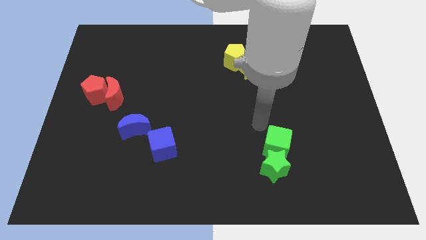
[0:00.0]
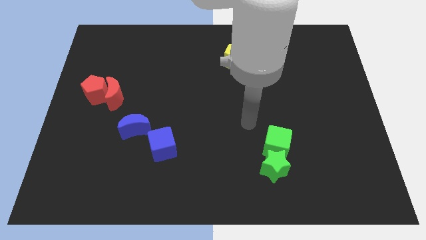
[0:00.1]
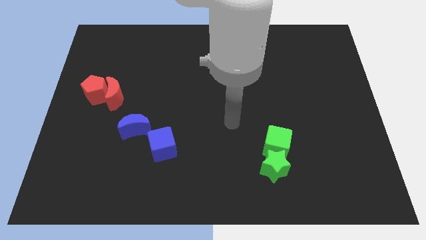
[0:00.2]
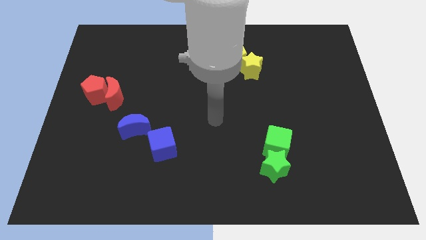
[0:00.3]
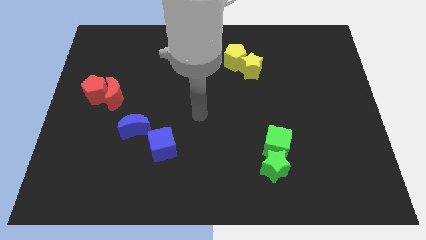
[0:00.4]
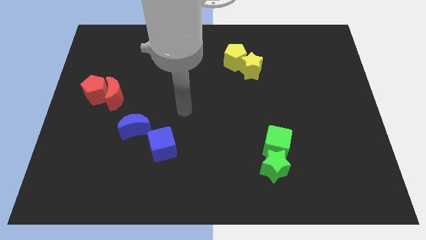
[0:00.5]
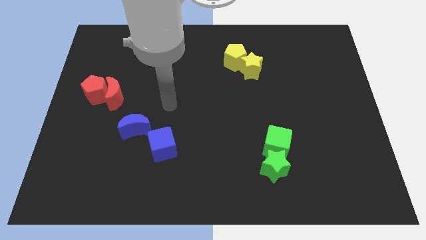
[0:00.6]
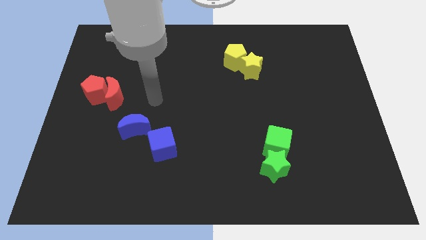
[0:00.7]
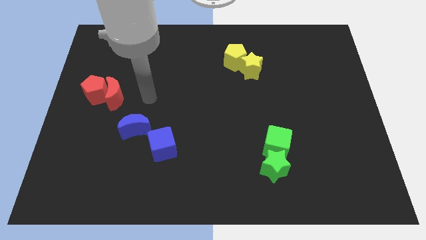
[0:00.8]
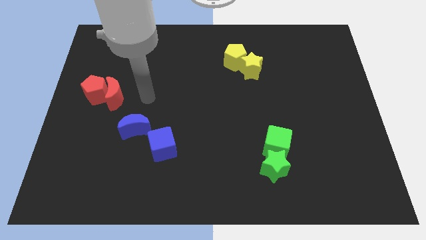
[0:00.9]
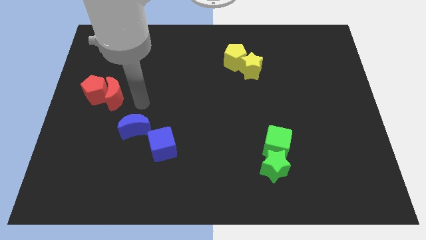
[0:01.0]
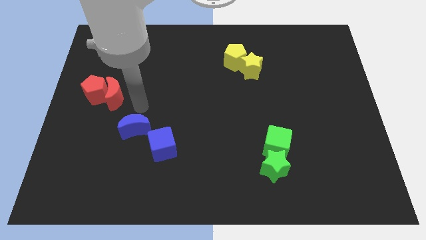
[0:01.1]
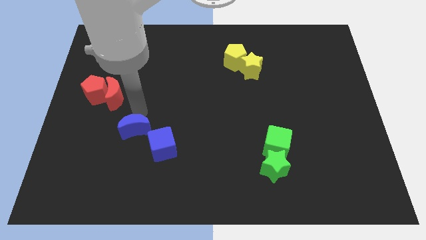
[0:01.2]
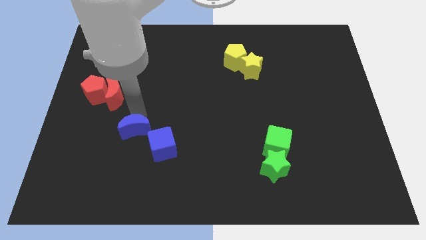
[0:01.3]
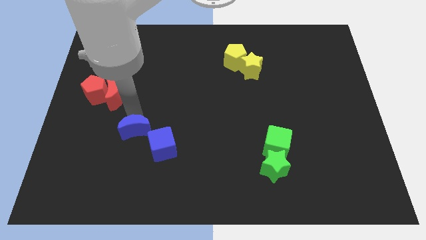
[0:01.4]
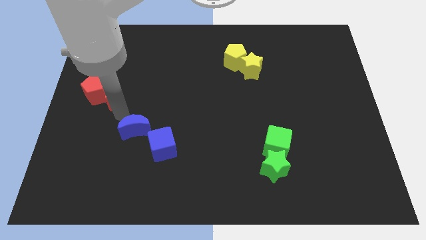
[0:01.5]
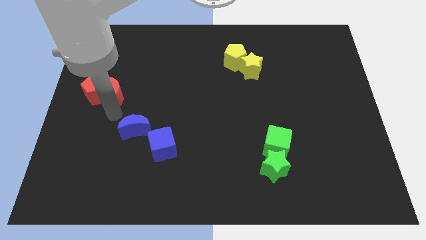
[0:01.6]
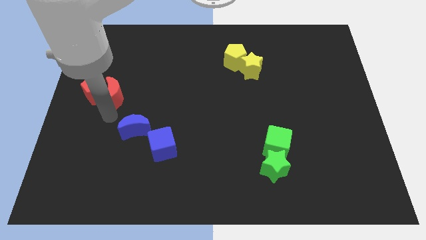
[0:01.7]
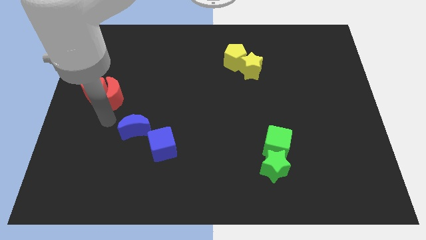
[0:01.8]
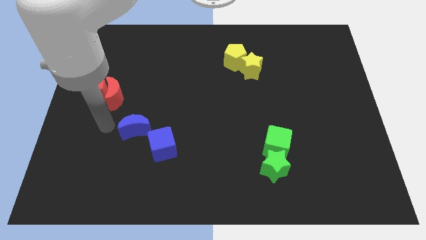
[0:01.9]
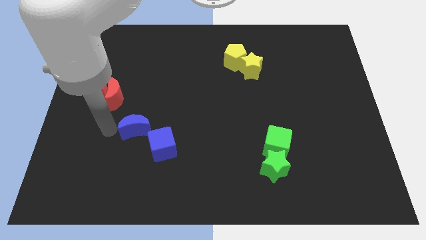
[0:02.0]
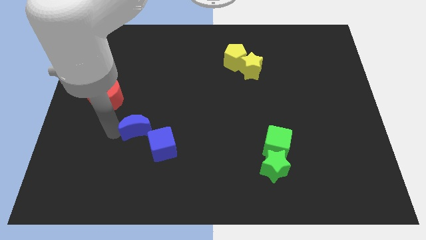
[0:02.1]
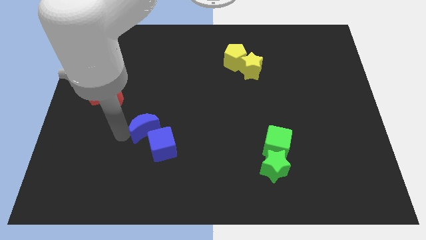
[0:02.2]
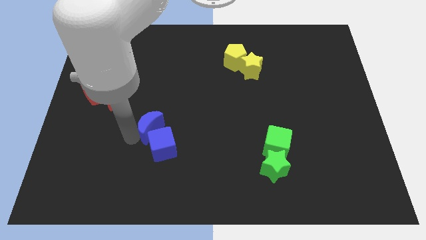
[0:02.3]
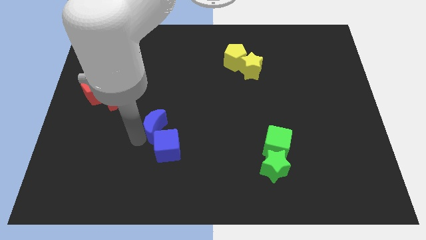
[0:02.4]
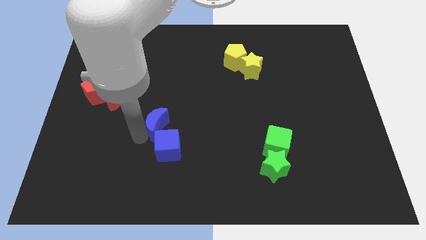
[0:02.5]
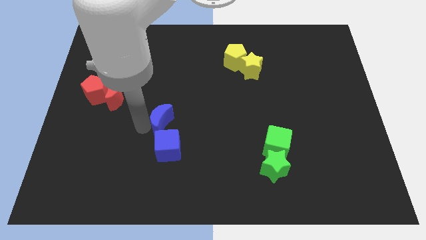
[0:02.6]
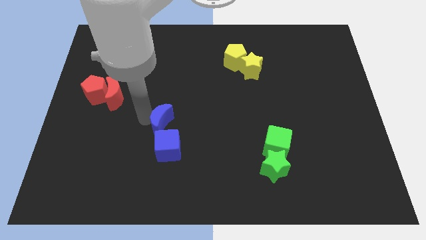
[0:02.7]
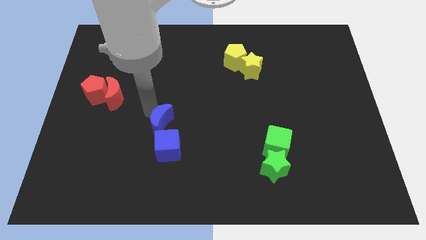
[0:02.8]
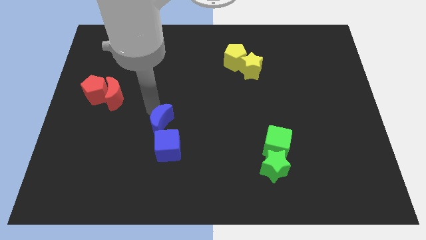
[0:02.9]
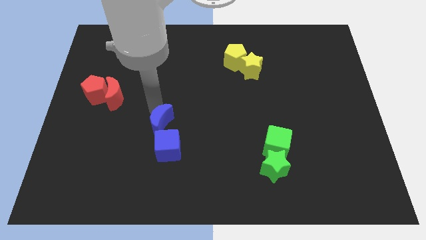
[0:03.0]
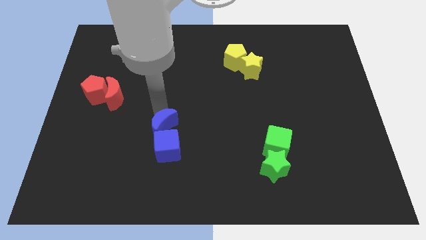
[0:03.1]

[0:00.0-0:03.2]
put the blue crescent at the top of the blue cube

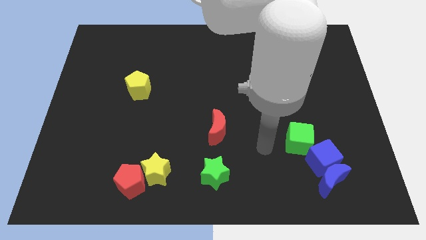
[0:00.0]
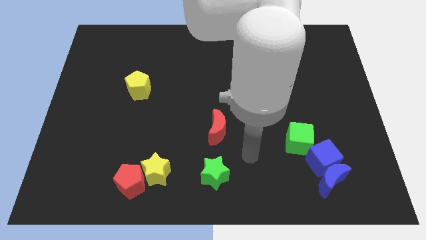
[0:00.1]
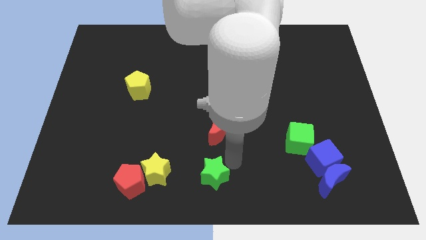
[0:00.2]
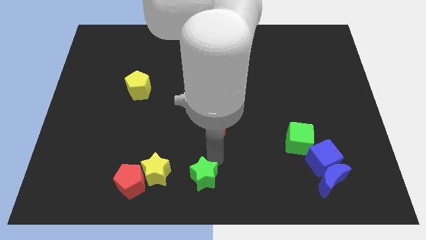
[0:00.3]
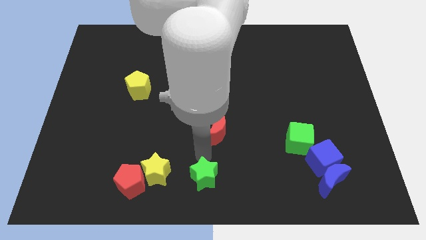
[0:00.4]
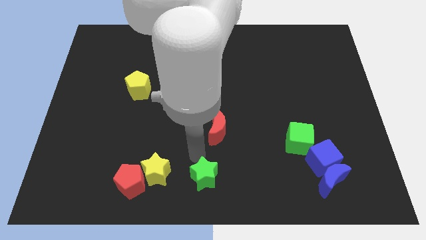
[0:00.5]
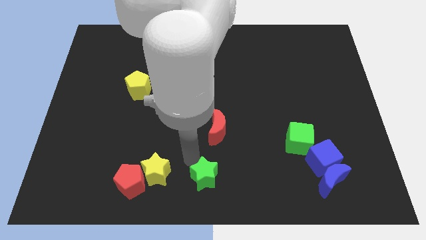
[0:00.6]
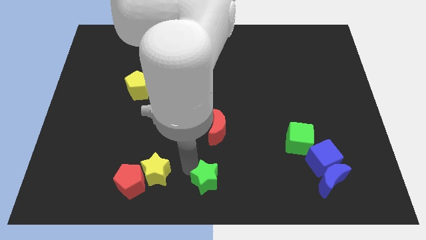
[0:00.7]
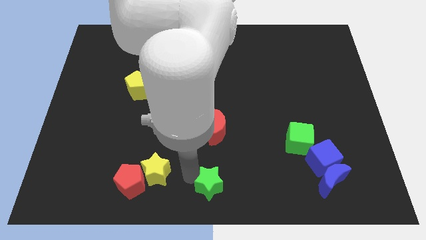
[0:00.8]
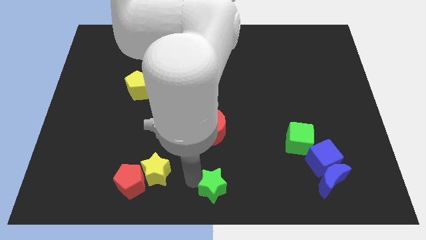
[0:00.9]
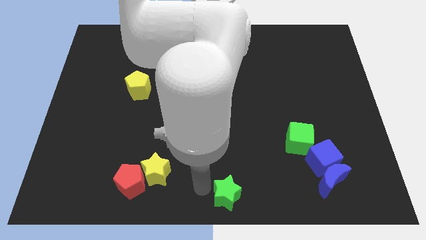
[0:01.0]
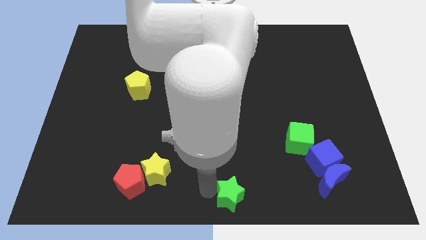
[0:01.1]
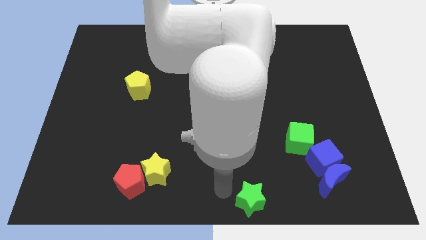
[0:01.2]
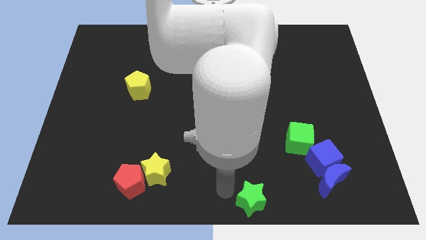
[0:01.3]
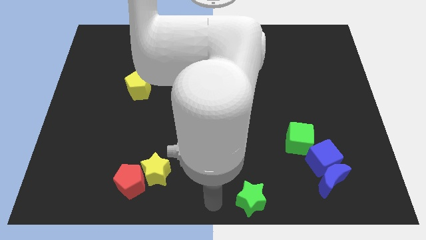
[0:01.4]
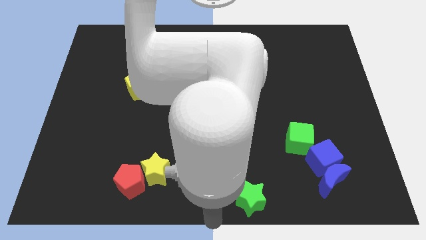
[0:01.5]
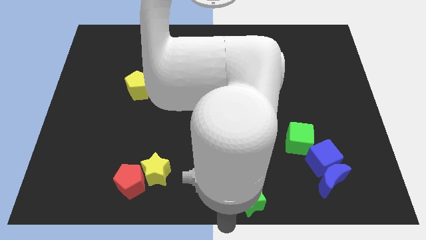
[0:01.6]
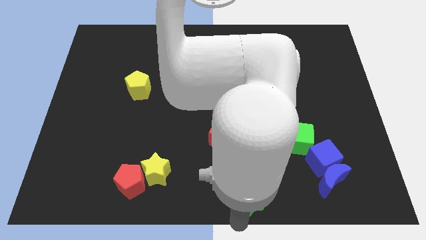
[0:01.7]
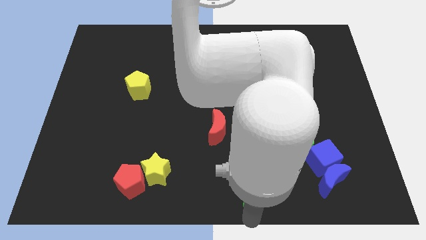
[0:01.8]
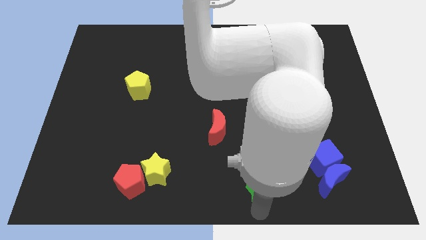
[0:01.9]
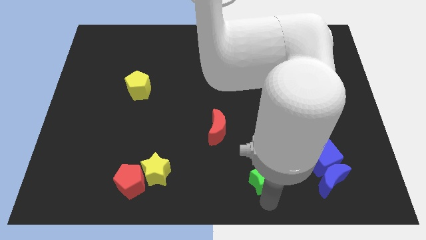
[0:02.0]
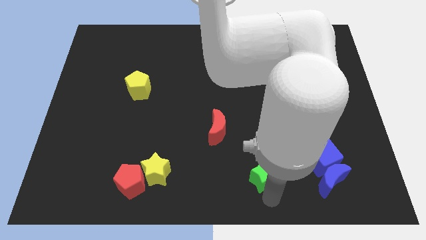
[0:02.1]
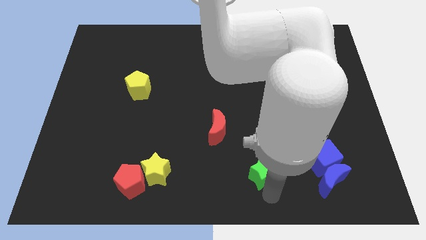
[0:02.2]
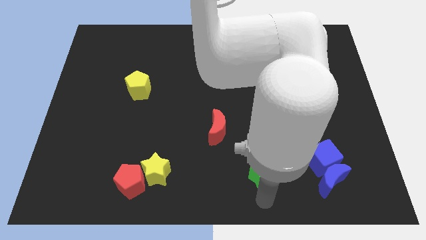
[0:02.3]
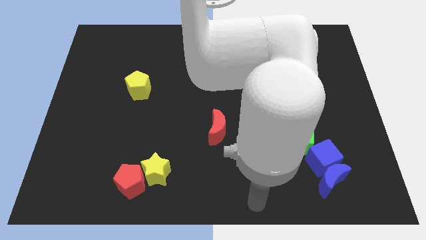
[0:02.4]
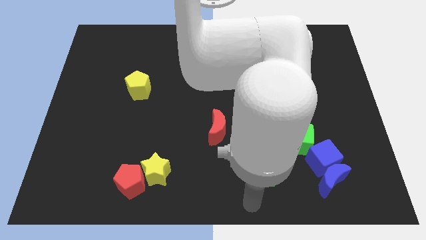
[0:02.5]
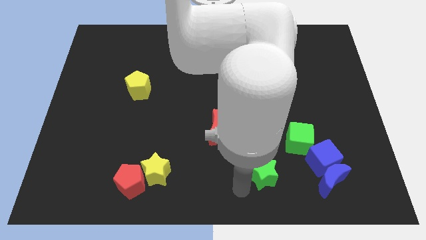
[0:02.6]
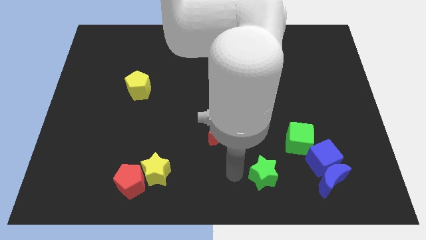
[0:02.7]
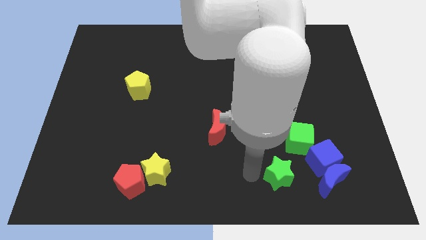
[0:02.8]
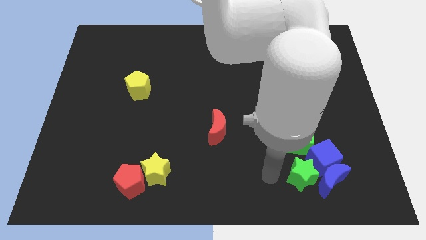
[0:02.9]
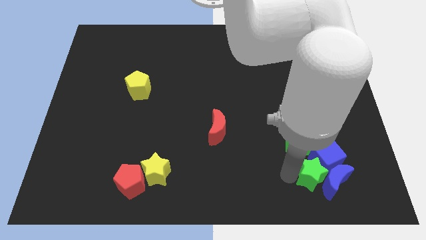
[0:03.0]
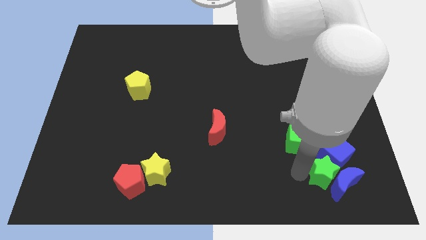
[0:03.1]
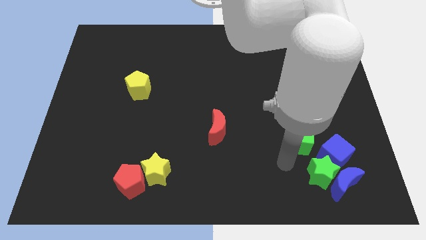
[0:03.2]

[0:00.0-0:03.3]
move the green star into the blue blocks

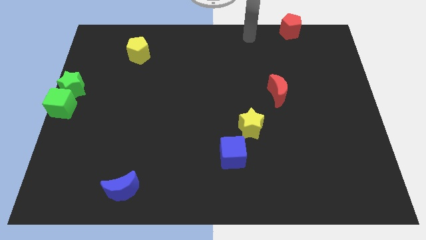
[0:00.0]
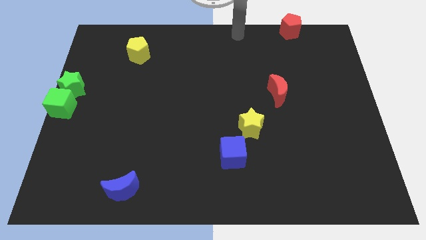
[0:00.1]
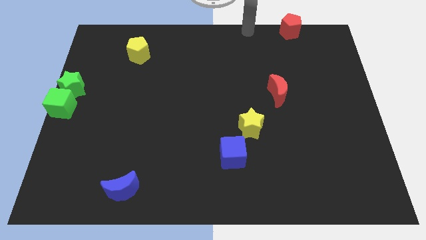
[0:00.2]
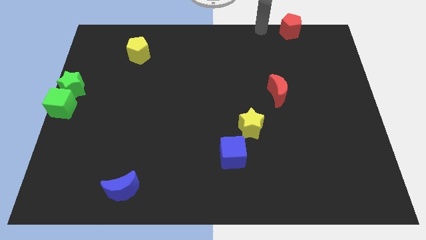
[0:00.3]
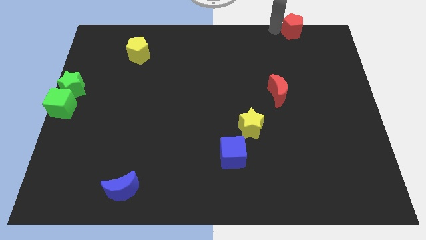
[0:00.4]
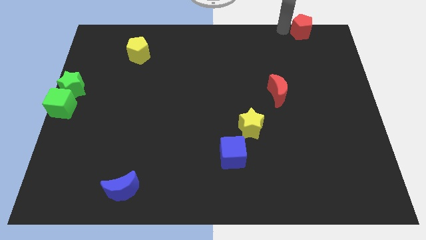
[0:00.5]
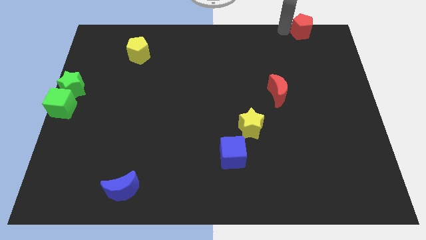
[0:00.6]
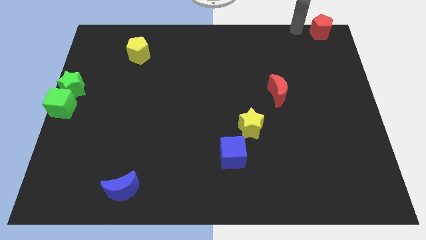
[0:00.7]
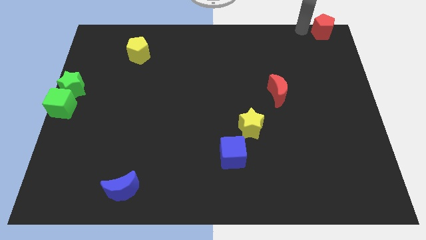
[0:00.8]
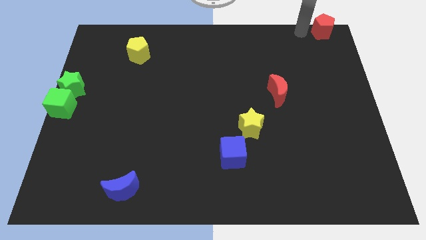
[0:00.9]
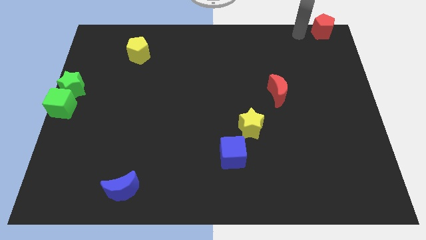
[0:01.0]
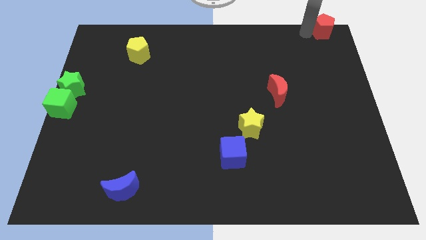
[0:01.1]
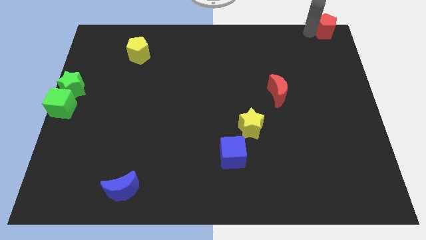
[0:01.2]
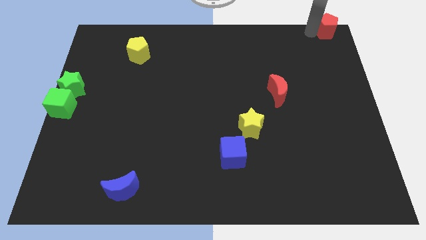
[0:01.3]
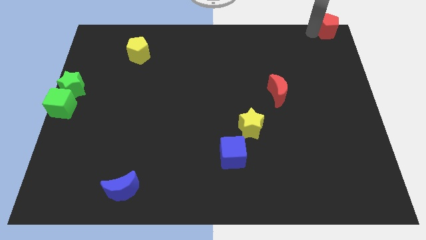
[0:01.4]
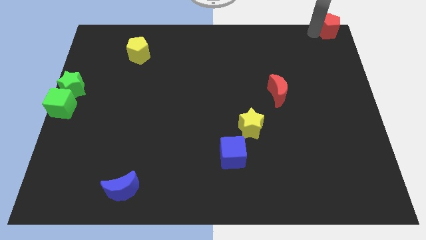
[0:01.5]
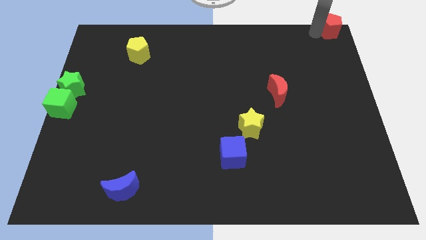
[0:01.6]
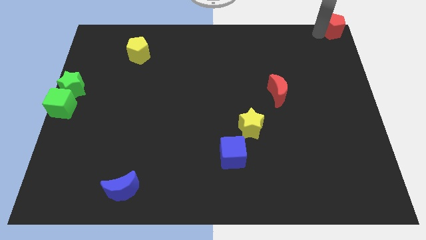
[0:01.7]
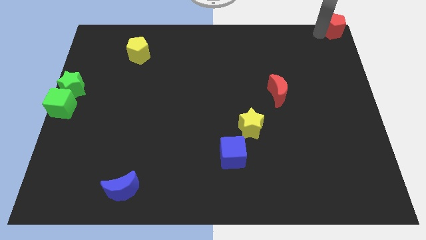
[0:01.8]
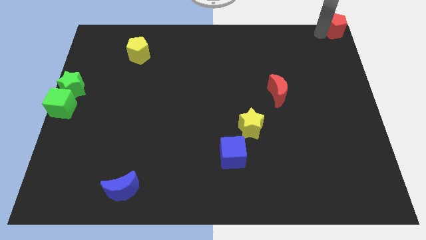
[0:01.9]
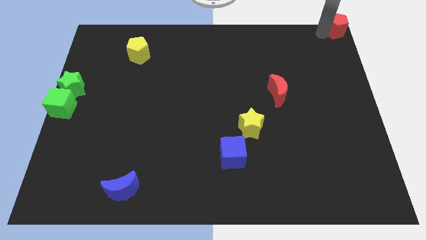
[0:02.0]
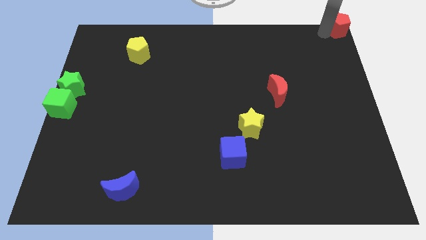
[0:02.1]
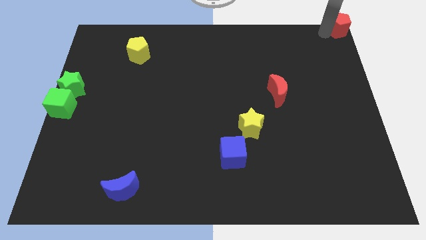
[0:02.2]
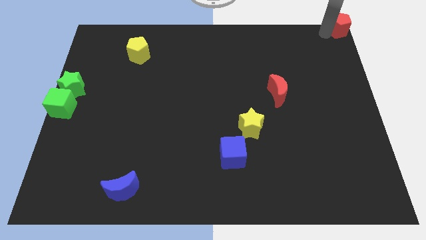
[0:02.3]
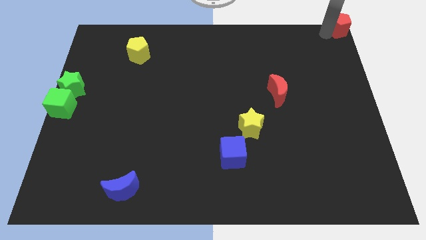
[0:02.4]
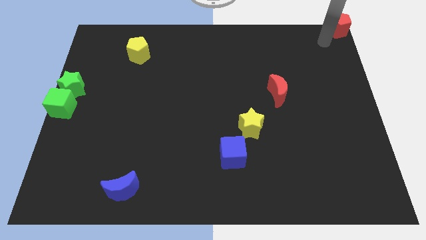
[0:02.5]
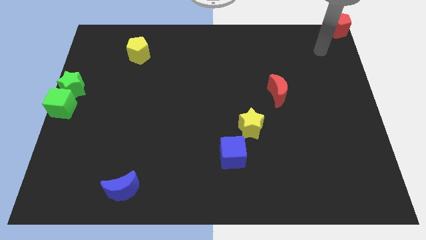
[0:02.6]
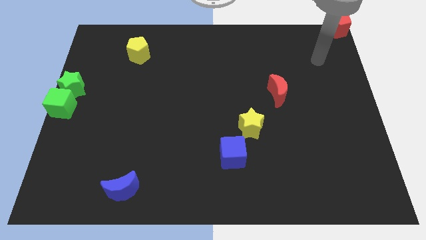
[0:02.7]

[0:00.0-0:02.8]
slide the red pentagon to the top right corner
